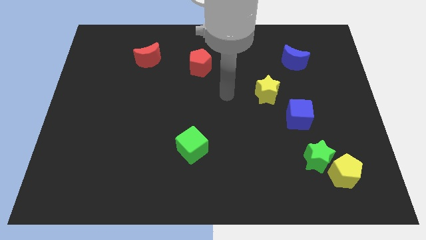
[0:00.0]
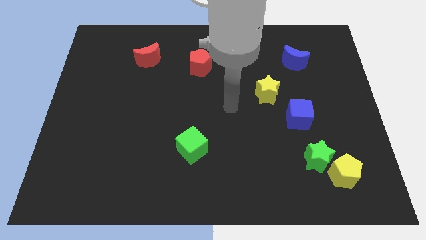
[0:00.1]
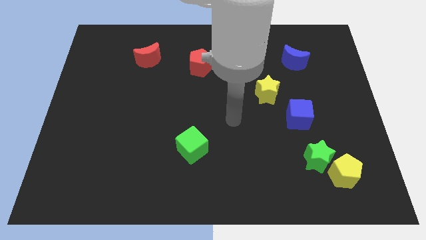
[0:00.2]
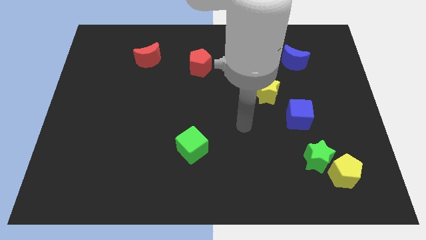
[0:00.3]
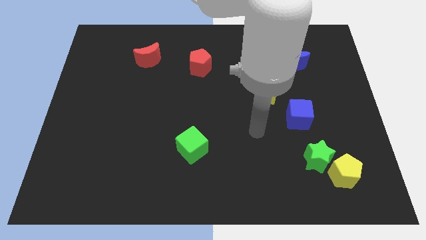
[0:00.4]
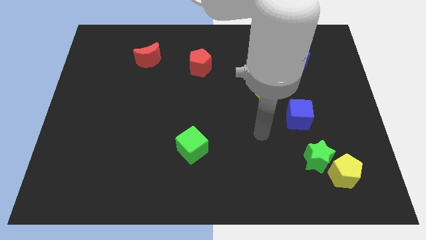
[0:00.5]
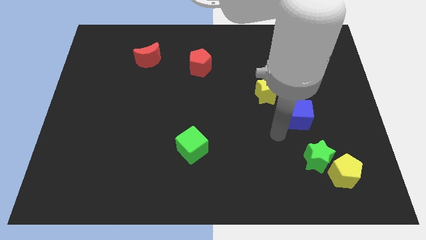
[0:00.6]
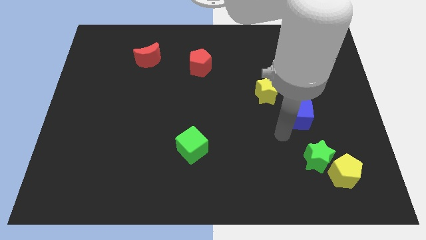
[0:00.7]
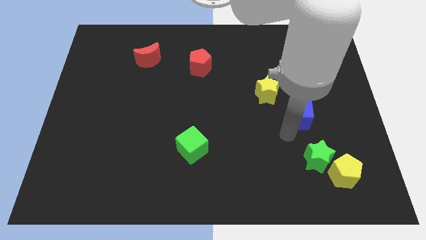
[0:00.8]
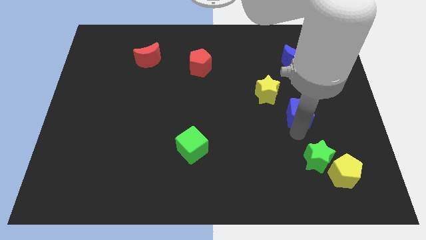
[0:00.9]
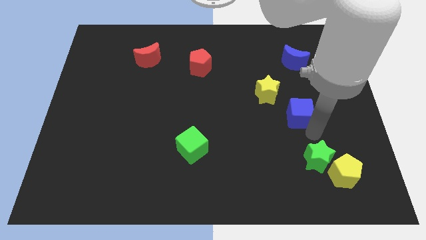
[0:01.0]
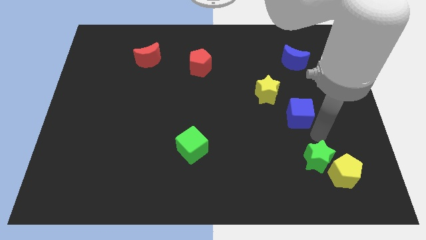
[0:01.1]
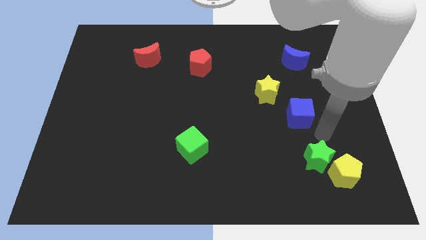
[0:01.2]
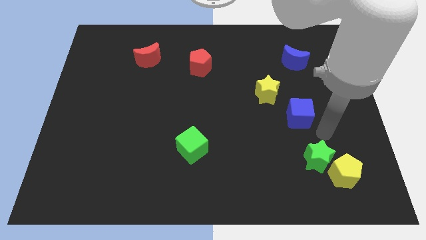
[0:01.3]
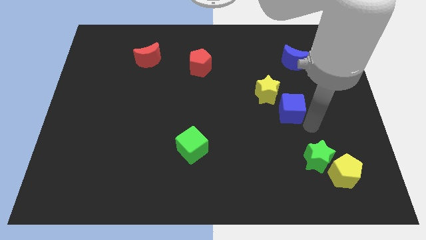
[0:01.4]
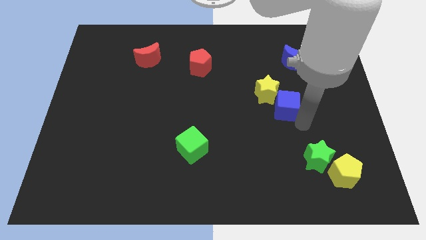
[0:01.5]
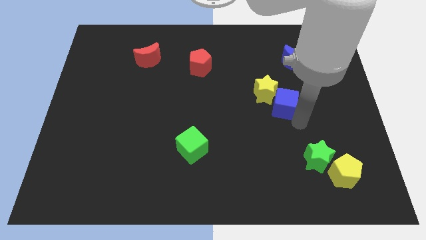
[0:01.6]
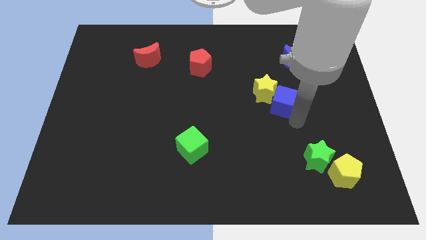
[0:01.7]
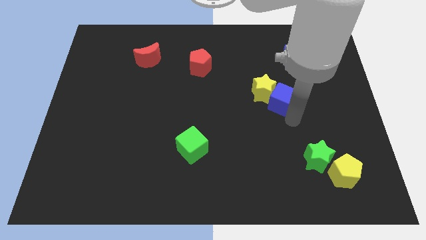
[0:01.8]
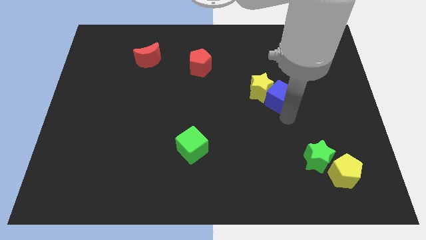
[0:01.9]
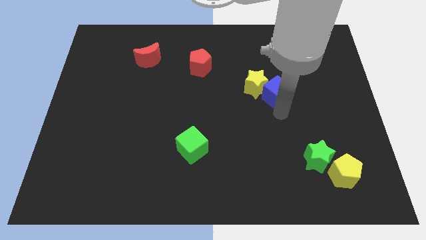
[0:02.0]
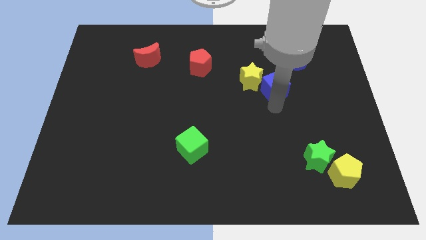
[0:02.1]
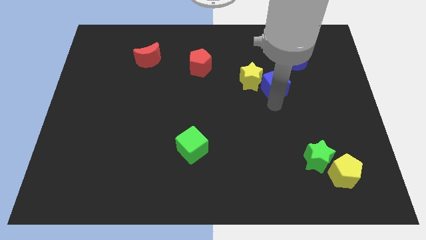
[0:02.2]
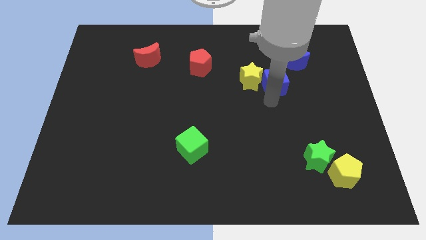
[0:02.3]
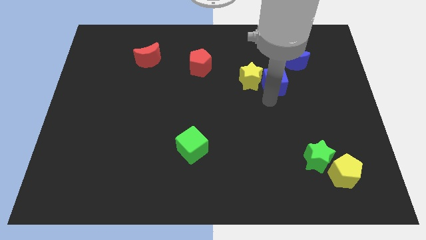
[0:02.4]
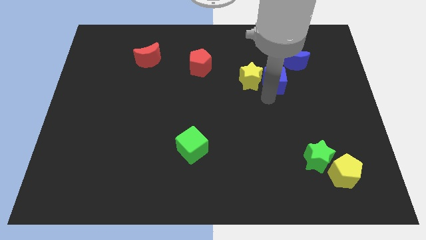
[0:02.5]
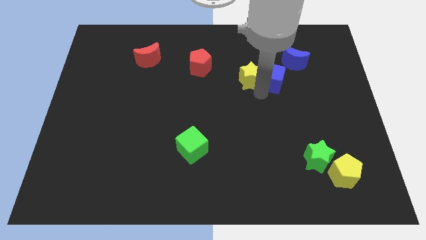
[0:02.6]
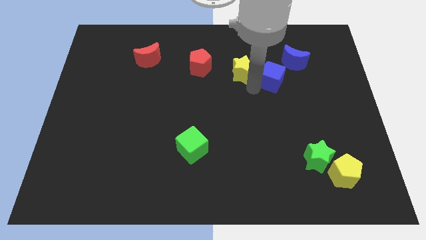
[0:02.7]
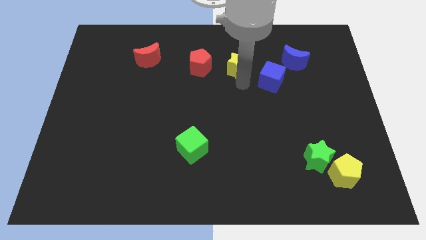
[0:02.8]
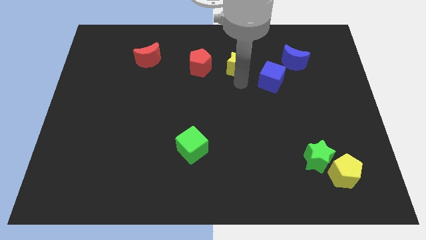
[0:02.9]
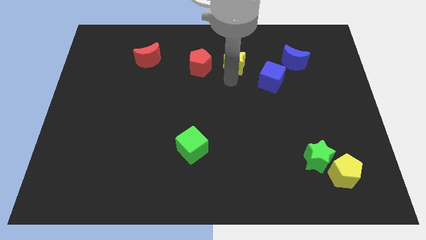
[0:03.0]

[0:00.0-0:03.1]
place the yellow star to the right of the red pentagon

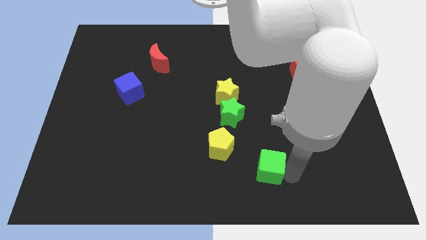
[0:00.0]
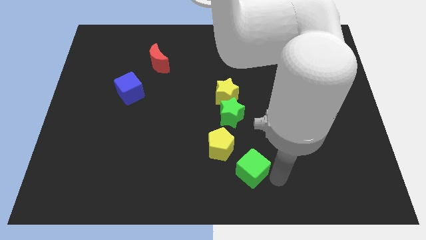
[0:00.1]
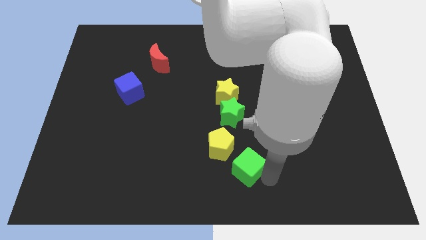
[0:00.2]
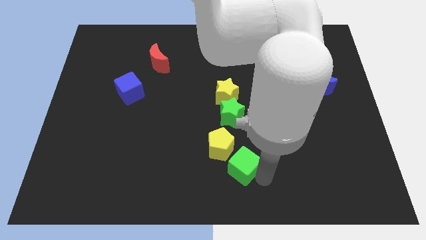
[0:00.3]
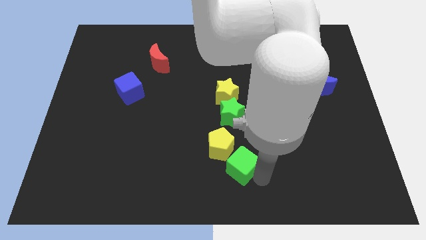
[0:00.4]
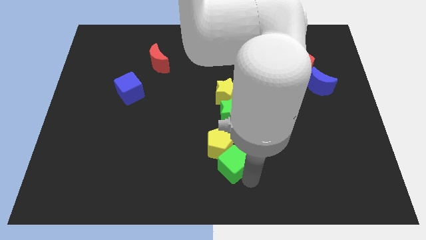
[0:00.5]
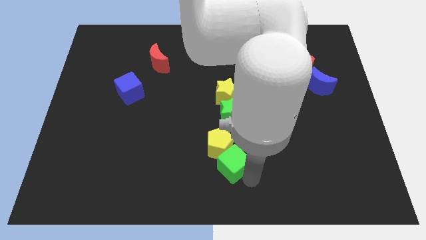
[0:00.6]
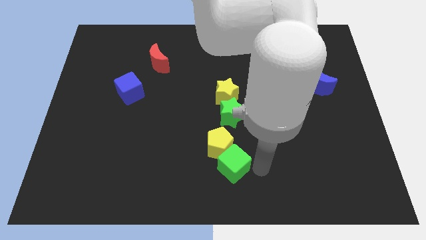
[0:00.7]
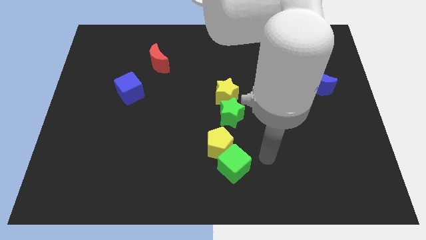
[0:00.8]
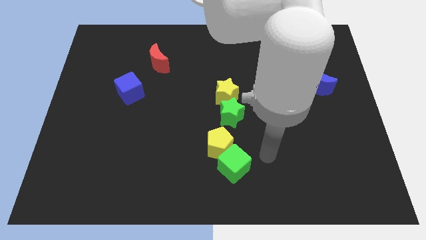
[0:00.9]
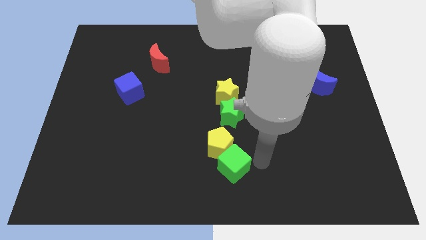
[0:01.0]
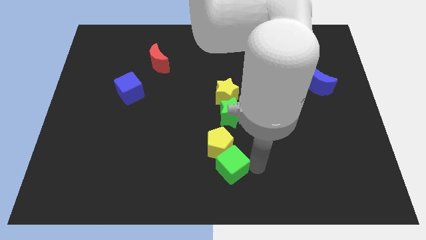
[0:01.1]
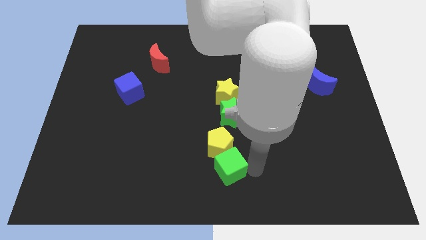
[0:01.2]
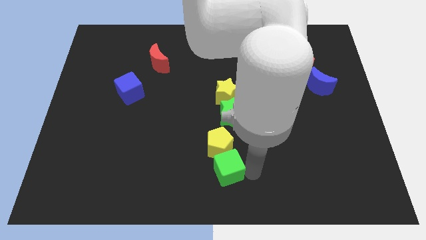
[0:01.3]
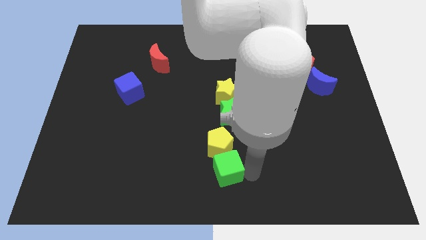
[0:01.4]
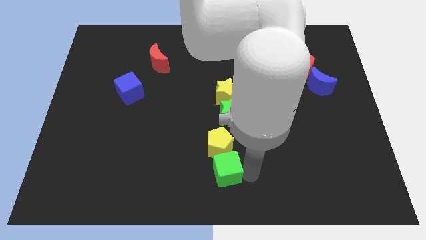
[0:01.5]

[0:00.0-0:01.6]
push the green cube into the yellow pentagon

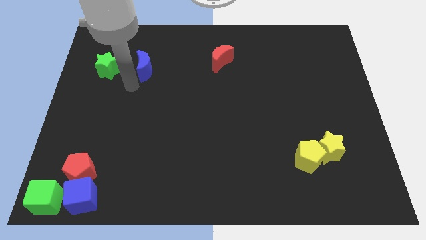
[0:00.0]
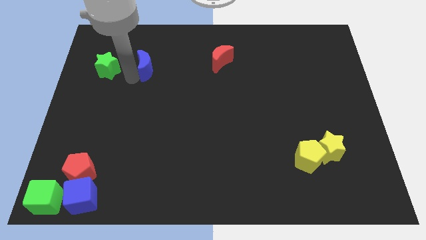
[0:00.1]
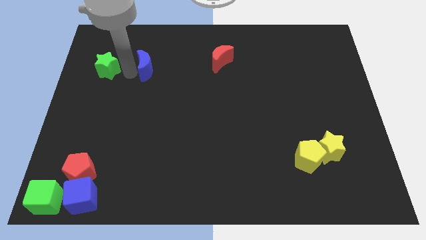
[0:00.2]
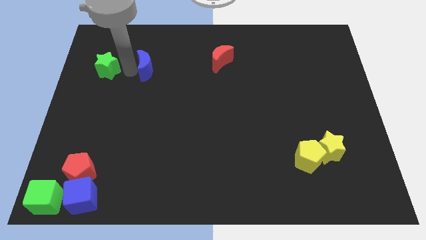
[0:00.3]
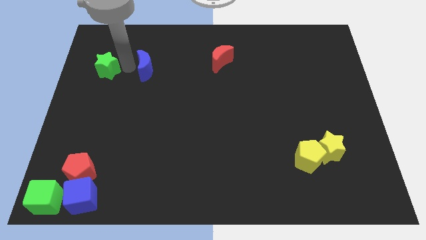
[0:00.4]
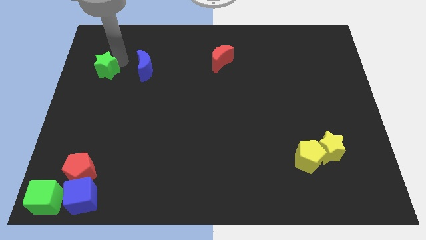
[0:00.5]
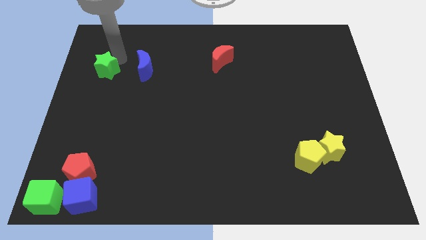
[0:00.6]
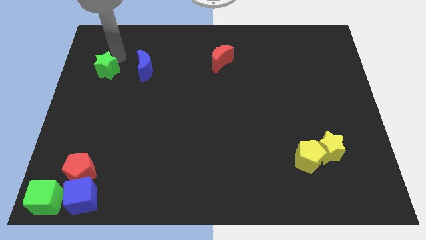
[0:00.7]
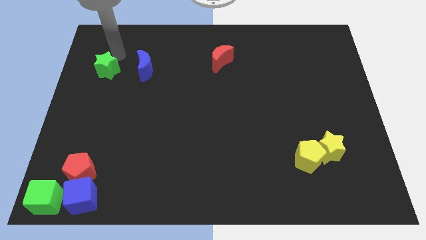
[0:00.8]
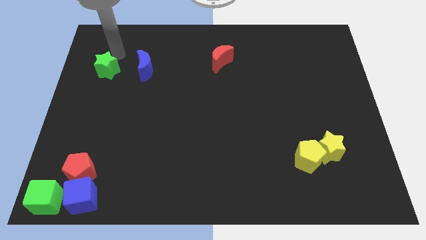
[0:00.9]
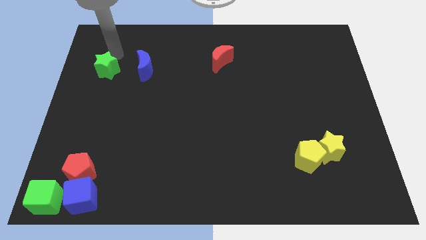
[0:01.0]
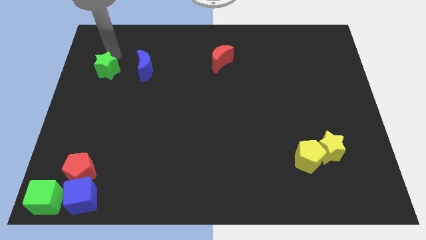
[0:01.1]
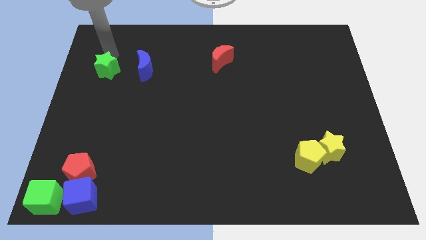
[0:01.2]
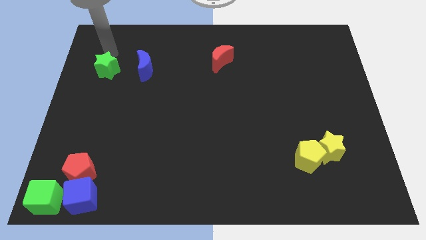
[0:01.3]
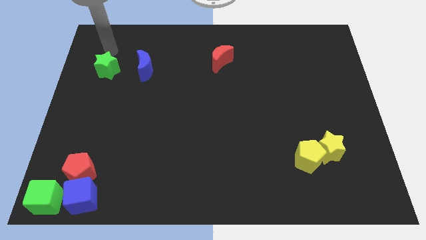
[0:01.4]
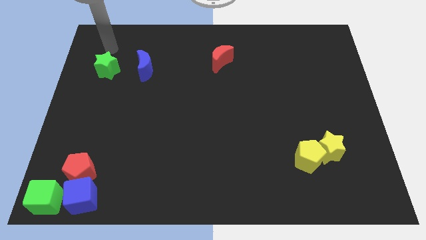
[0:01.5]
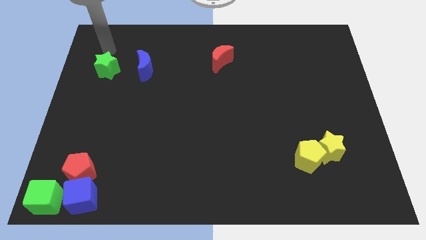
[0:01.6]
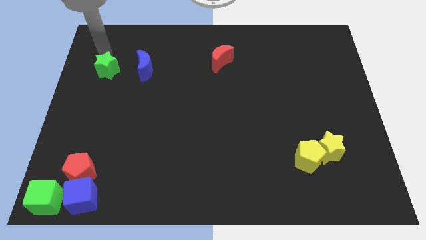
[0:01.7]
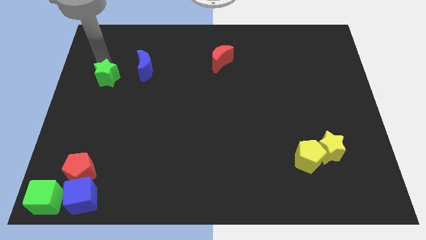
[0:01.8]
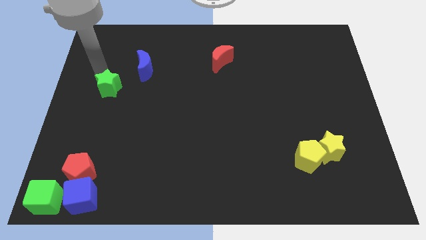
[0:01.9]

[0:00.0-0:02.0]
put the green star diagonally on the bottom left side of the blue moon

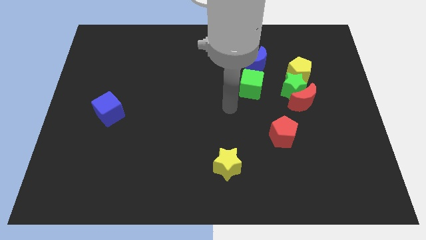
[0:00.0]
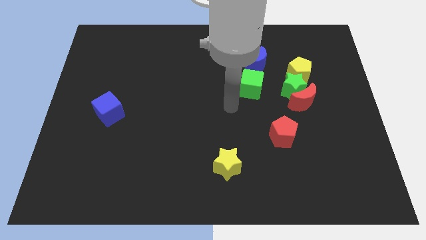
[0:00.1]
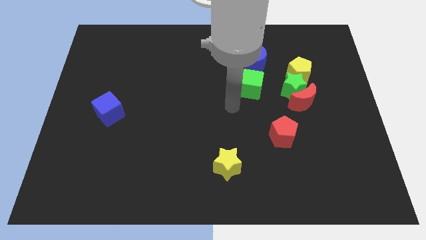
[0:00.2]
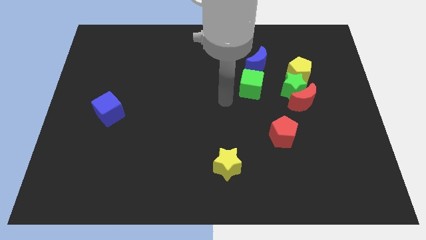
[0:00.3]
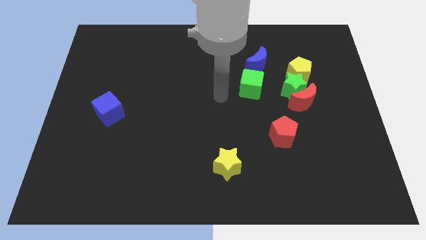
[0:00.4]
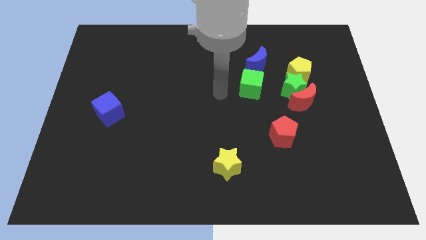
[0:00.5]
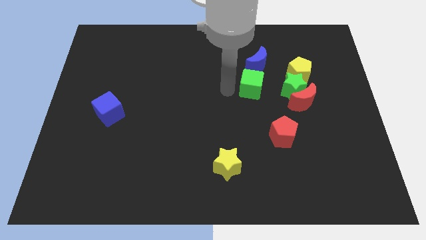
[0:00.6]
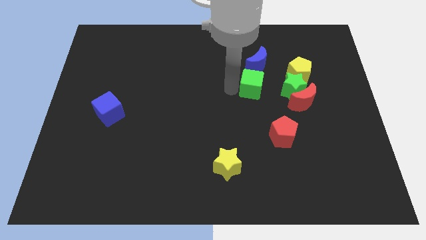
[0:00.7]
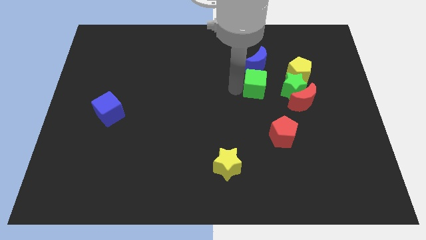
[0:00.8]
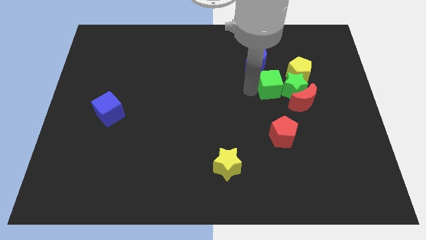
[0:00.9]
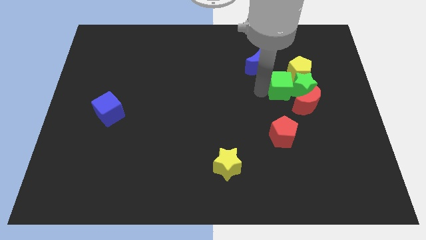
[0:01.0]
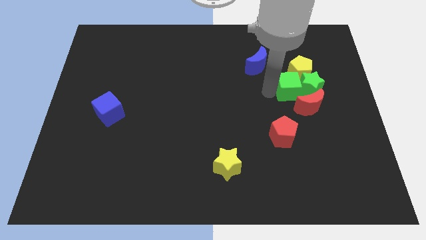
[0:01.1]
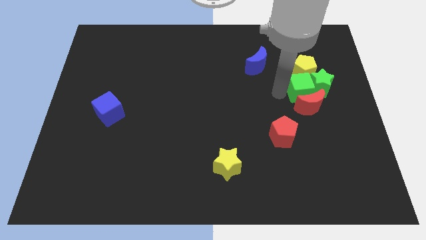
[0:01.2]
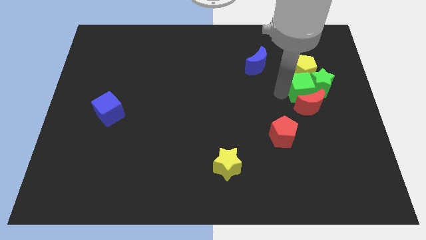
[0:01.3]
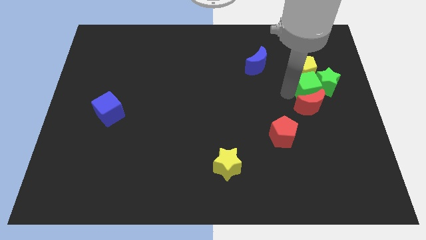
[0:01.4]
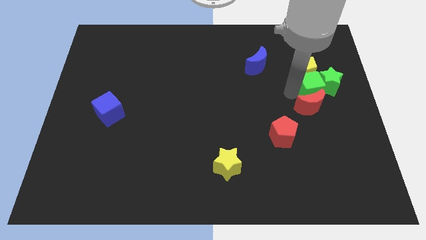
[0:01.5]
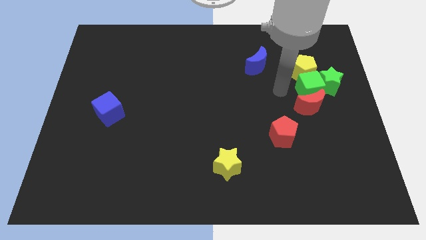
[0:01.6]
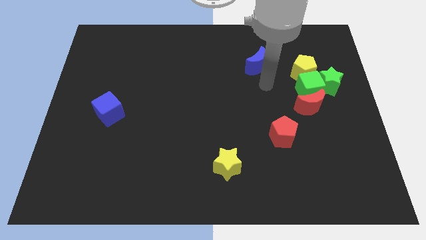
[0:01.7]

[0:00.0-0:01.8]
push the green cube into the green star

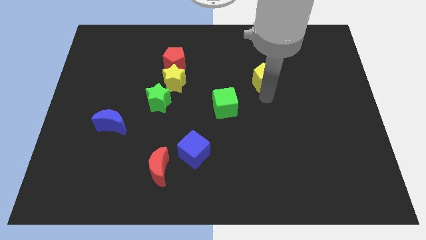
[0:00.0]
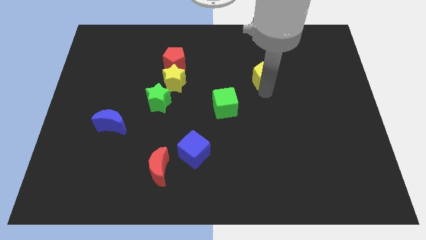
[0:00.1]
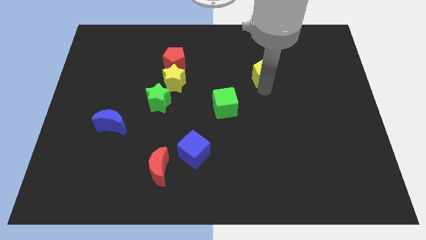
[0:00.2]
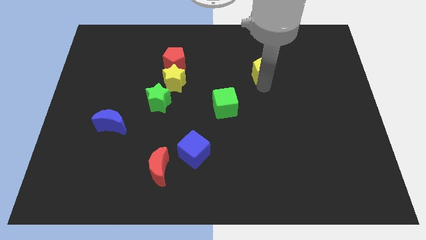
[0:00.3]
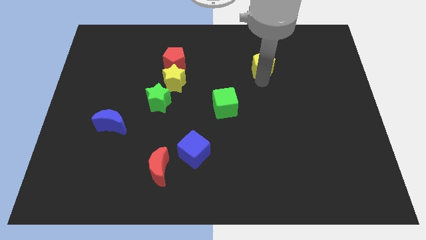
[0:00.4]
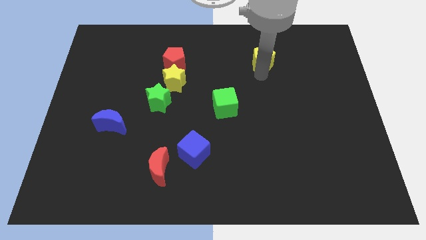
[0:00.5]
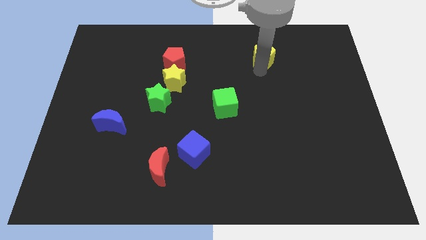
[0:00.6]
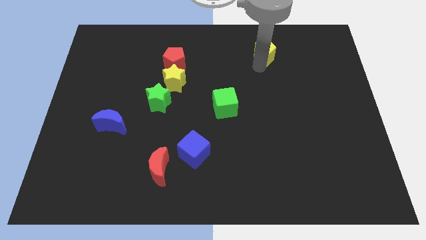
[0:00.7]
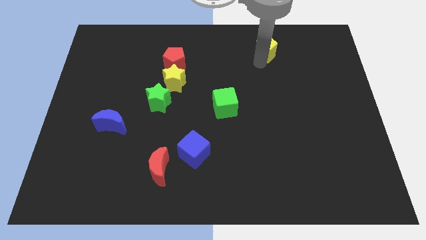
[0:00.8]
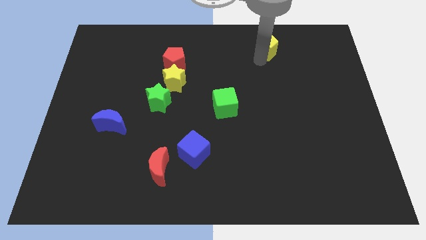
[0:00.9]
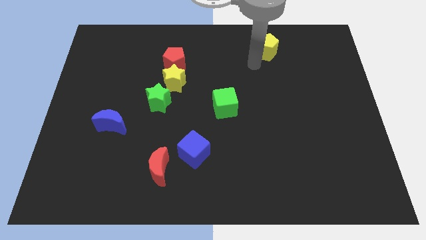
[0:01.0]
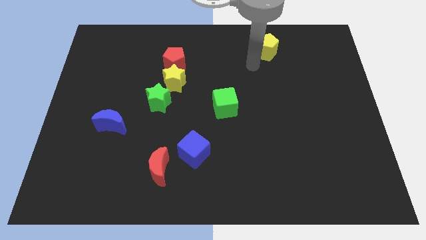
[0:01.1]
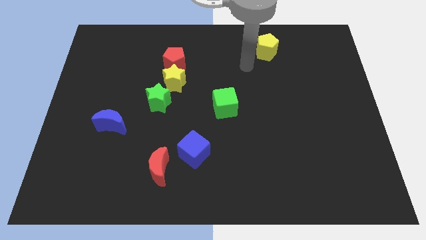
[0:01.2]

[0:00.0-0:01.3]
push the yellow pentagon near to the top center of the board
